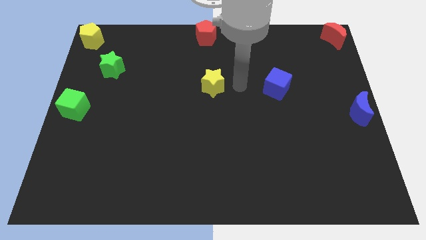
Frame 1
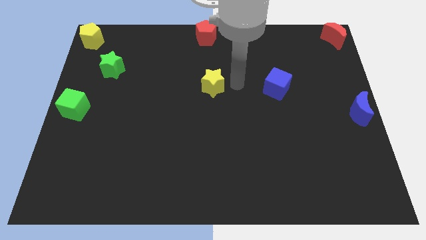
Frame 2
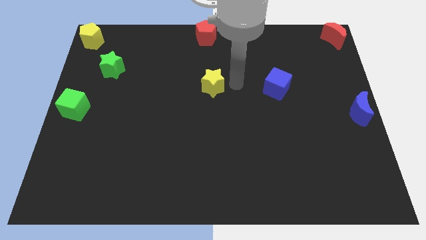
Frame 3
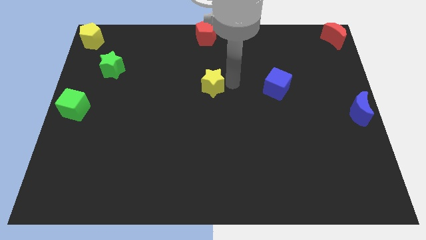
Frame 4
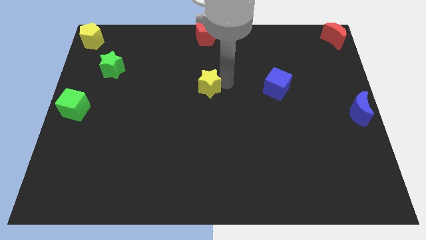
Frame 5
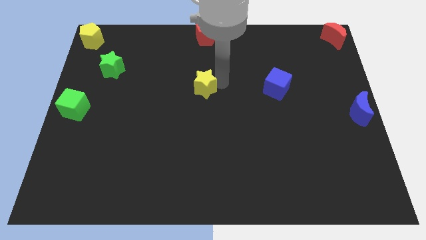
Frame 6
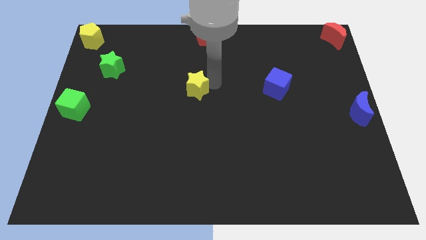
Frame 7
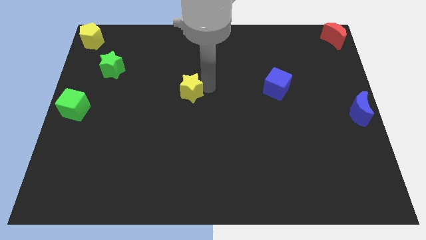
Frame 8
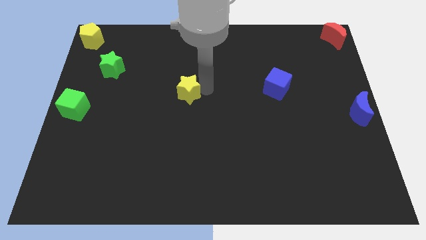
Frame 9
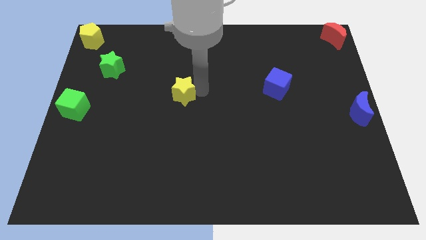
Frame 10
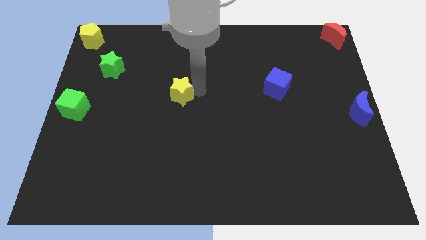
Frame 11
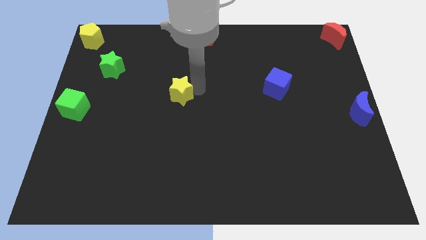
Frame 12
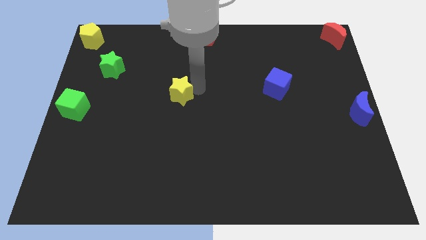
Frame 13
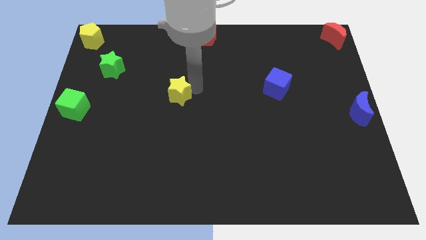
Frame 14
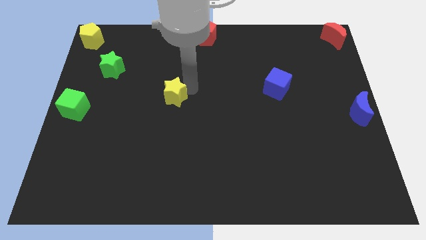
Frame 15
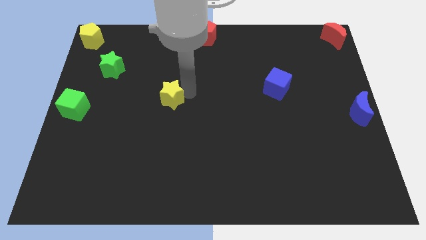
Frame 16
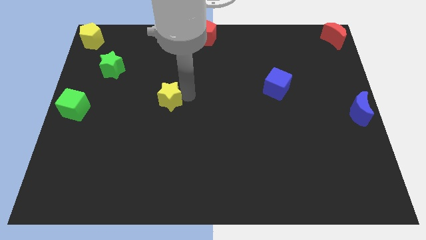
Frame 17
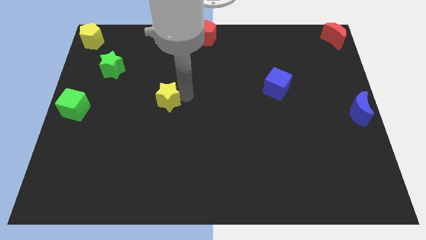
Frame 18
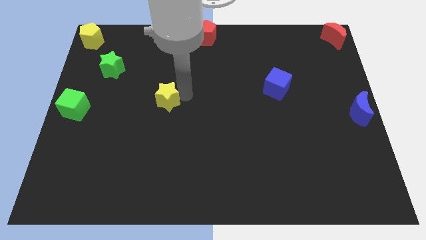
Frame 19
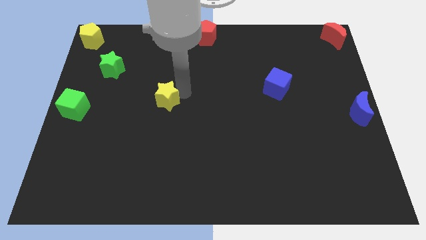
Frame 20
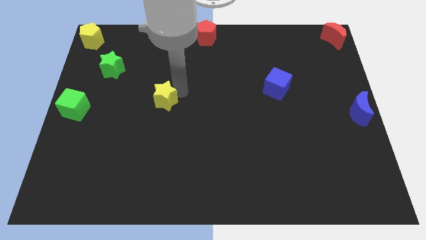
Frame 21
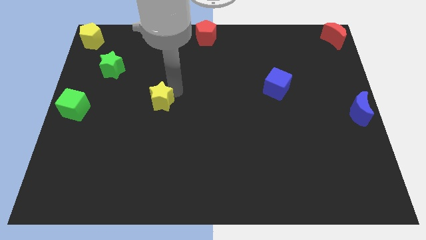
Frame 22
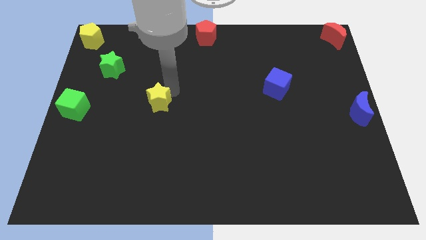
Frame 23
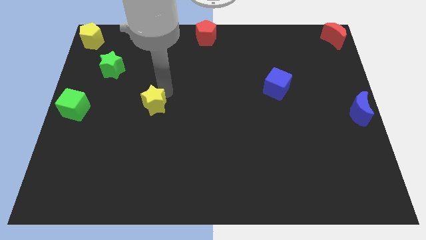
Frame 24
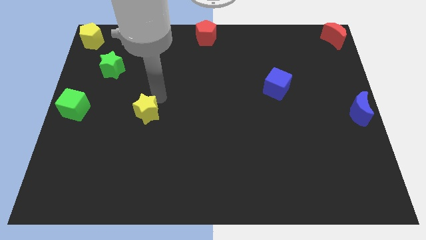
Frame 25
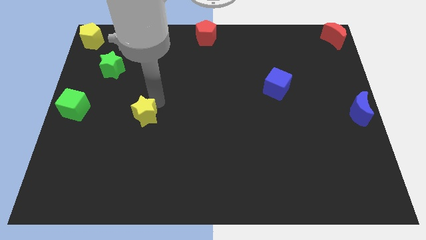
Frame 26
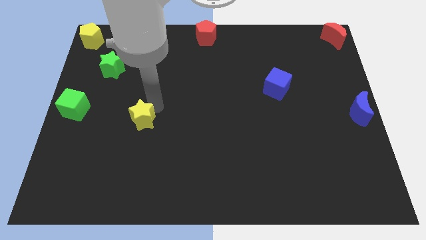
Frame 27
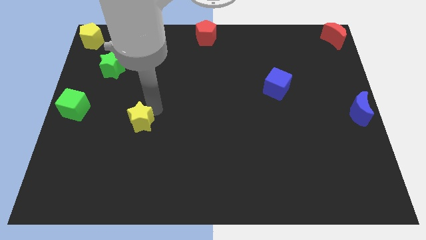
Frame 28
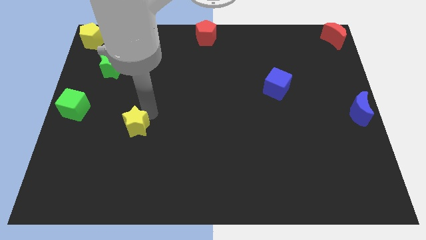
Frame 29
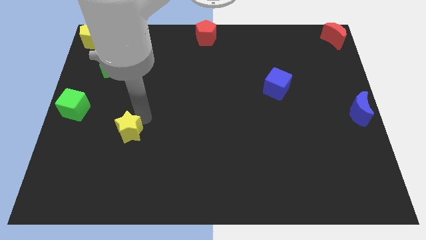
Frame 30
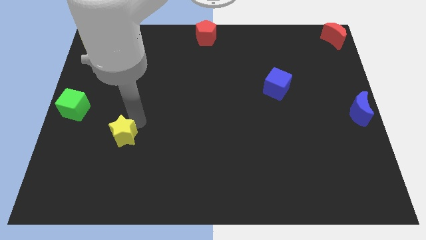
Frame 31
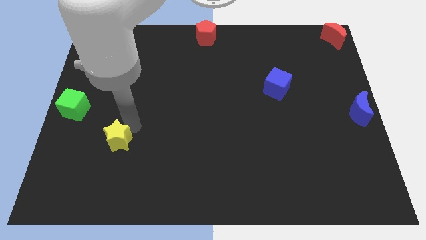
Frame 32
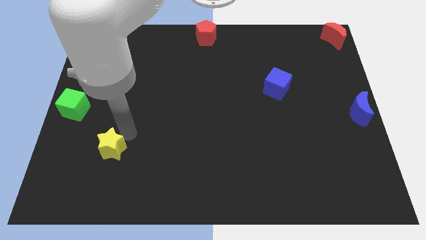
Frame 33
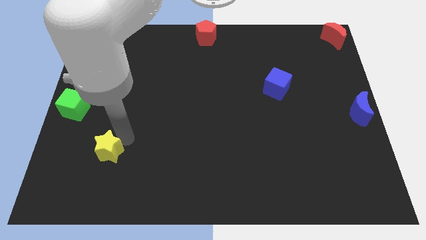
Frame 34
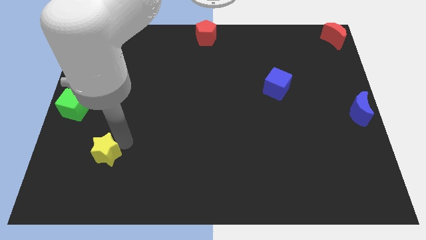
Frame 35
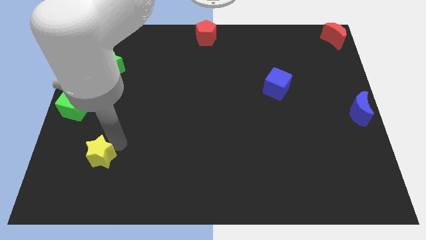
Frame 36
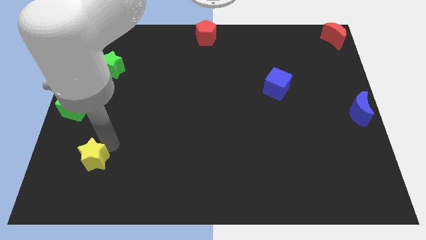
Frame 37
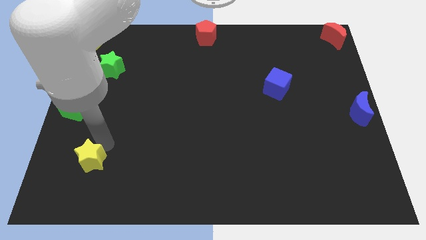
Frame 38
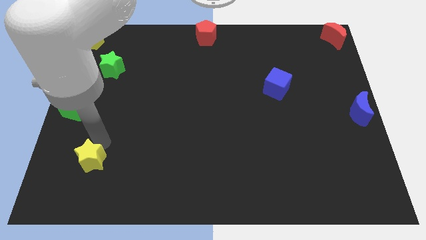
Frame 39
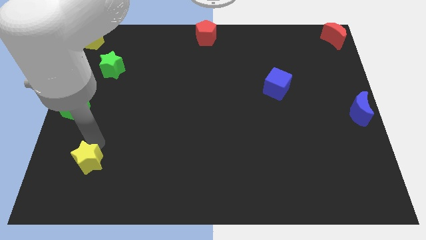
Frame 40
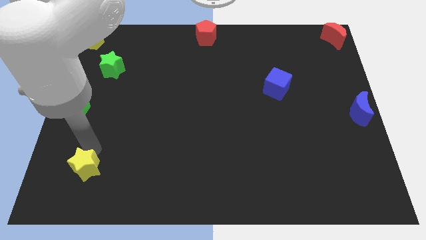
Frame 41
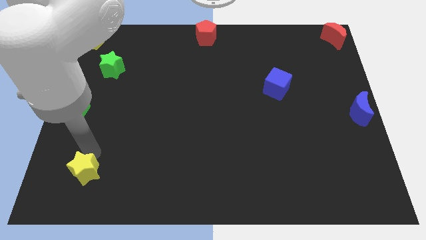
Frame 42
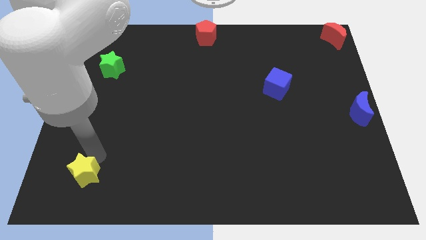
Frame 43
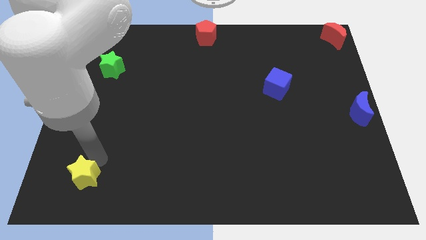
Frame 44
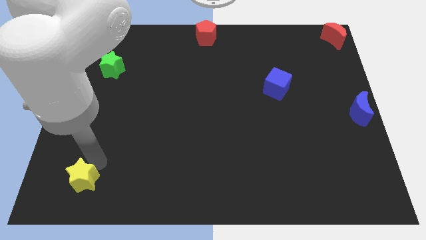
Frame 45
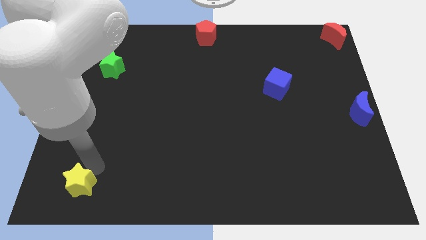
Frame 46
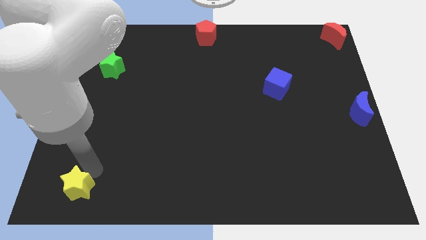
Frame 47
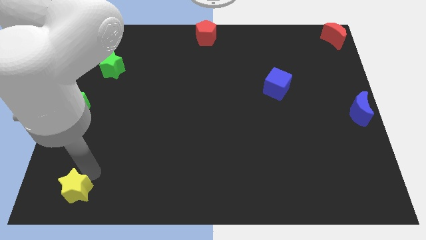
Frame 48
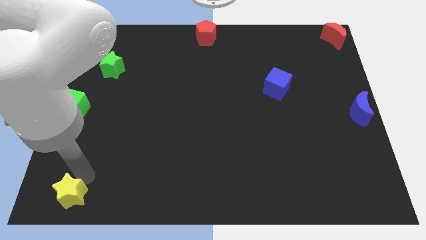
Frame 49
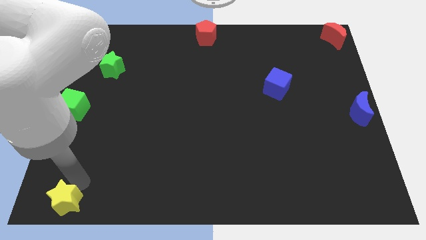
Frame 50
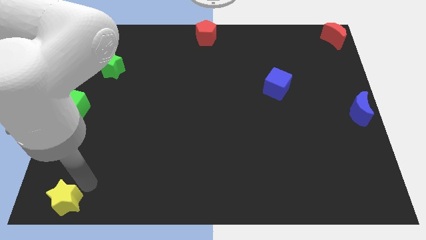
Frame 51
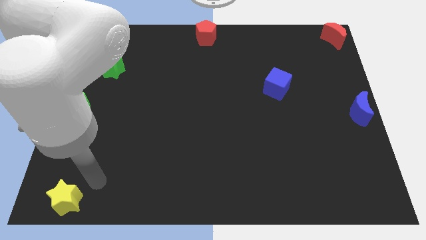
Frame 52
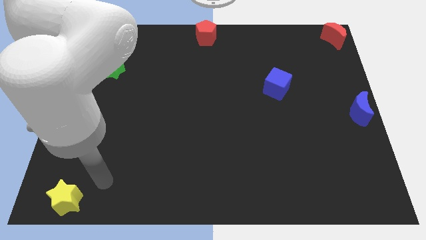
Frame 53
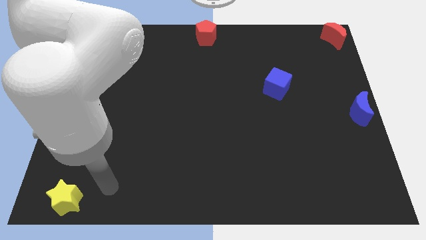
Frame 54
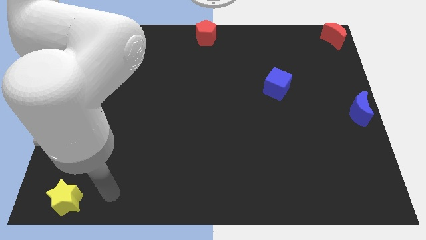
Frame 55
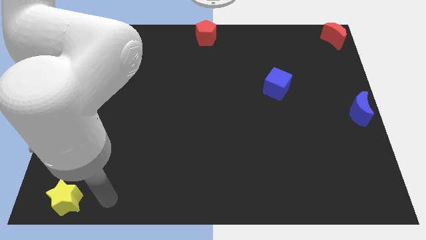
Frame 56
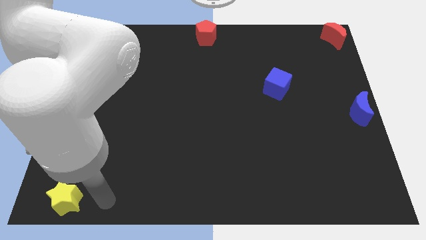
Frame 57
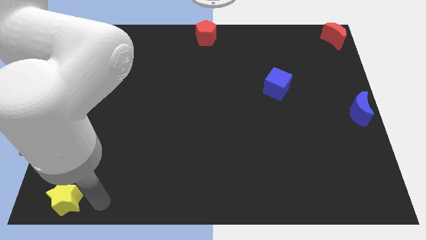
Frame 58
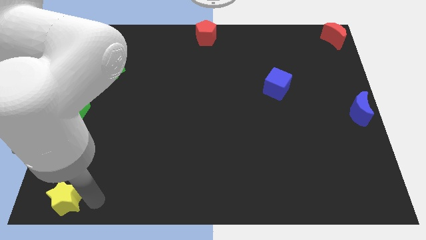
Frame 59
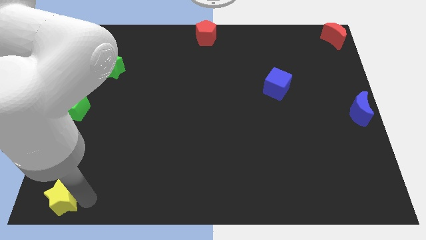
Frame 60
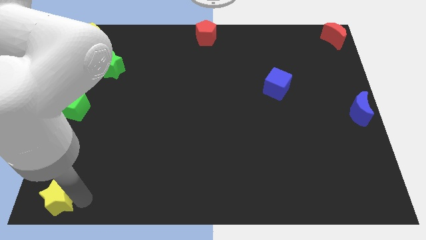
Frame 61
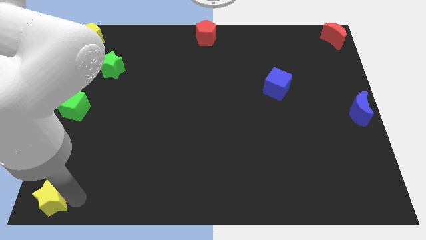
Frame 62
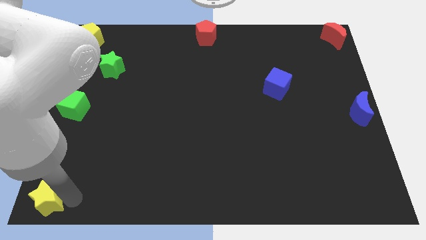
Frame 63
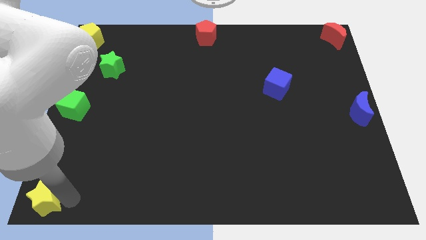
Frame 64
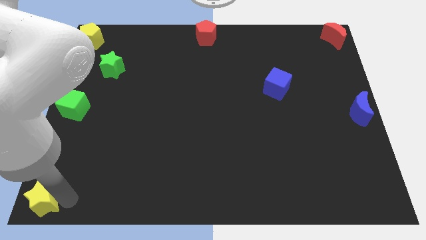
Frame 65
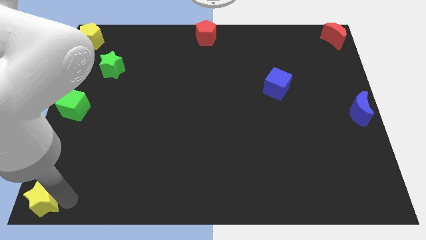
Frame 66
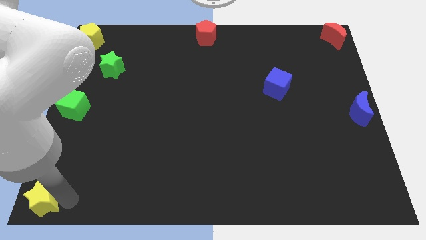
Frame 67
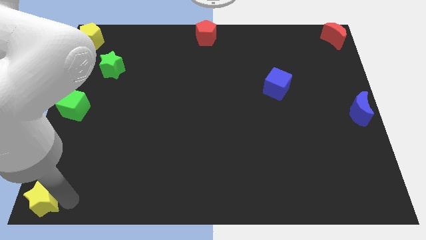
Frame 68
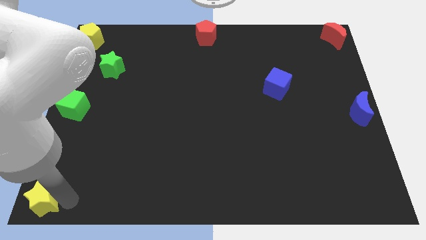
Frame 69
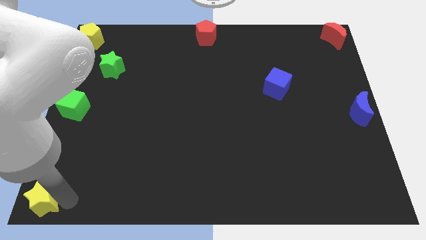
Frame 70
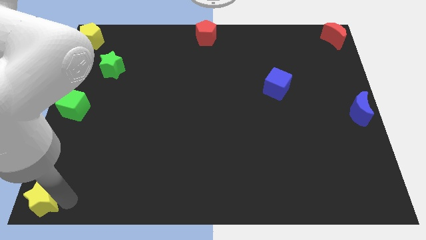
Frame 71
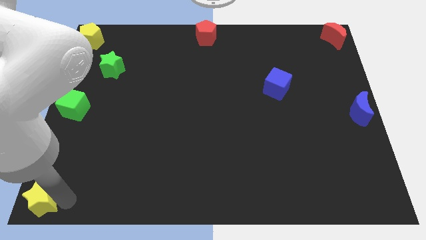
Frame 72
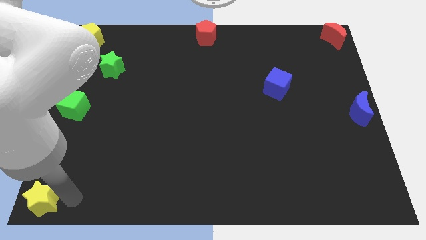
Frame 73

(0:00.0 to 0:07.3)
move the yellow star to the bottom left of the board

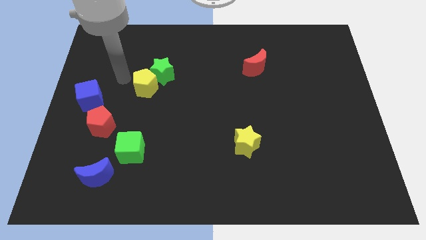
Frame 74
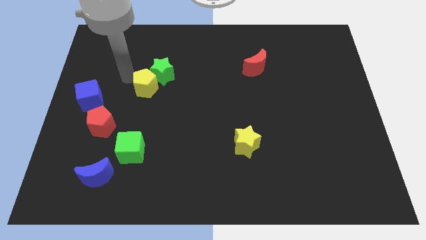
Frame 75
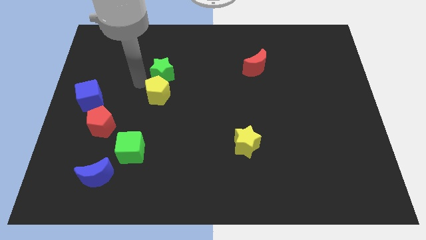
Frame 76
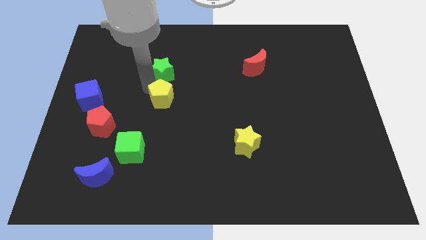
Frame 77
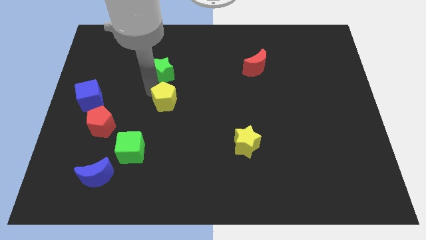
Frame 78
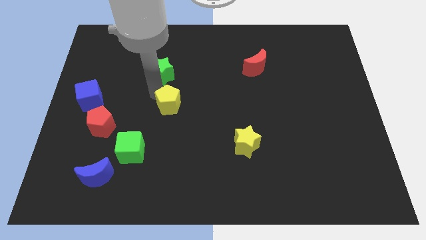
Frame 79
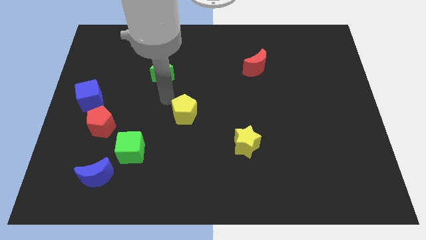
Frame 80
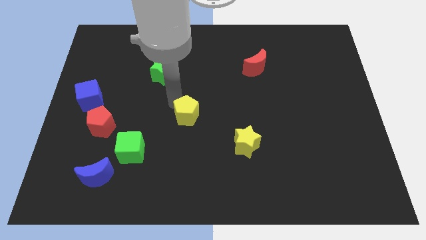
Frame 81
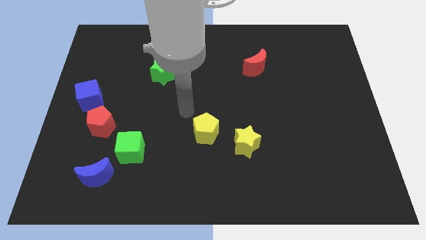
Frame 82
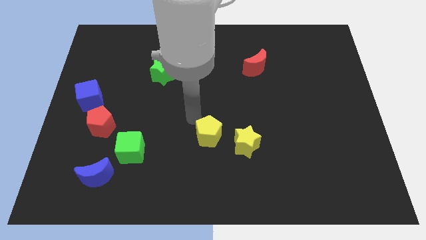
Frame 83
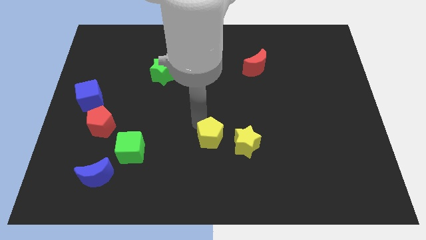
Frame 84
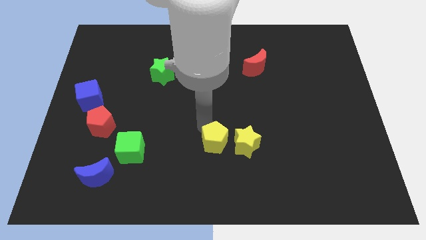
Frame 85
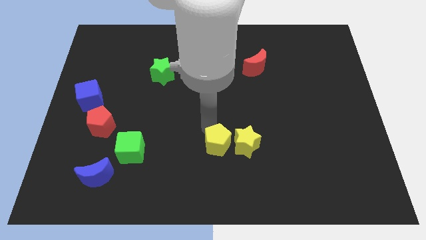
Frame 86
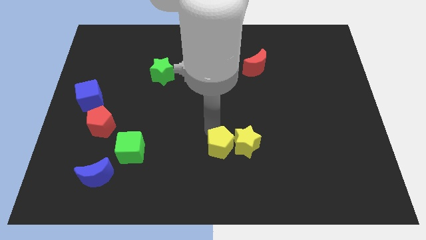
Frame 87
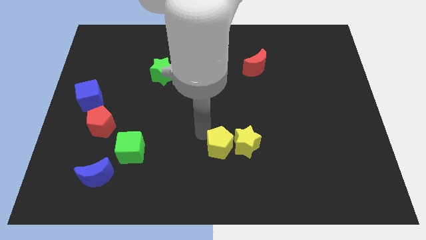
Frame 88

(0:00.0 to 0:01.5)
push the yellow pentagon to the left side of the yellow star

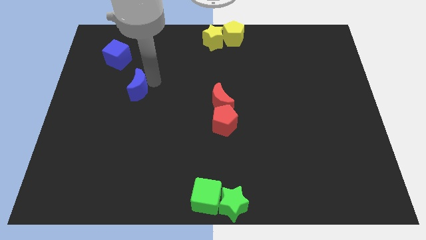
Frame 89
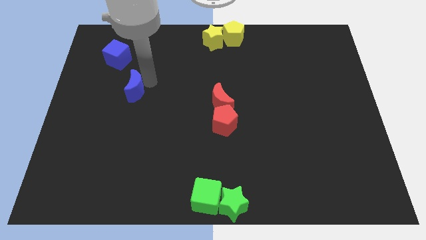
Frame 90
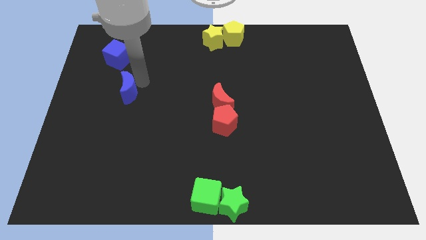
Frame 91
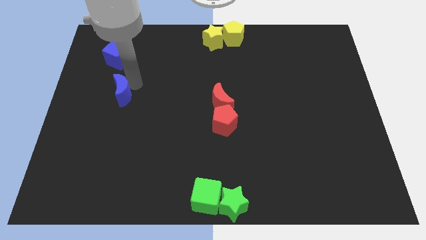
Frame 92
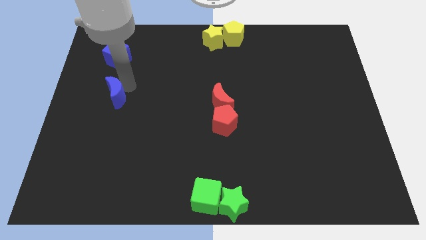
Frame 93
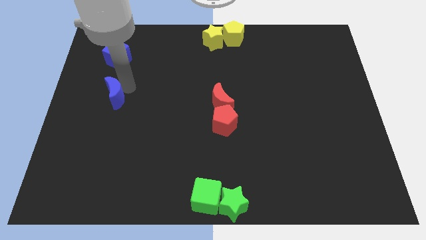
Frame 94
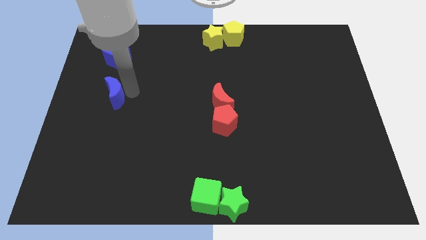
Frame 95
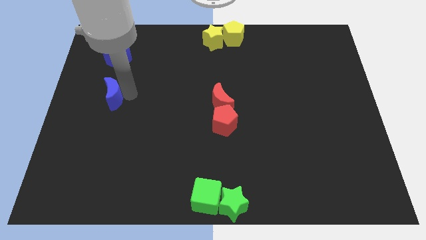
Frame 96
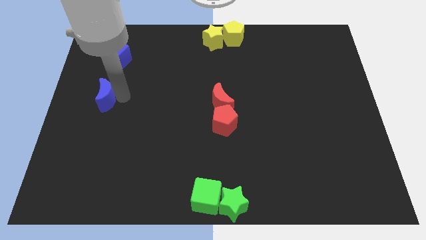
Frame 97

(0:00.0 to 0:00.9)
place the blue crescent below the blue cube
